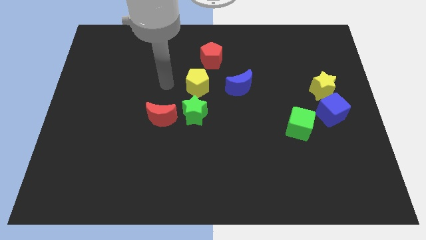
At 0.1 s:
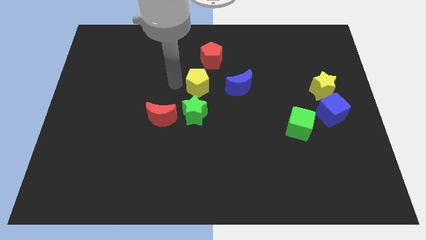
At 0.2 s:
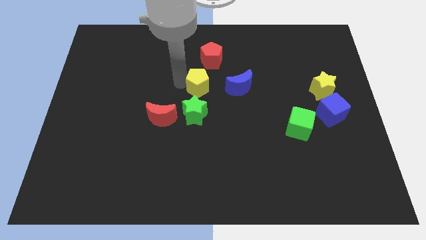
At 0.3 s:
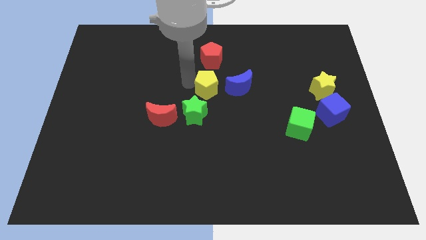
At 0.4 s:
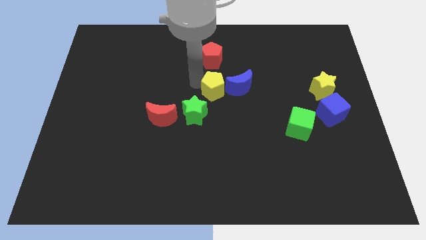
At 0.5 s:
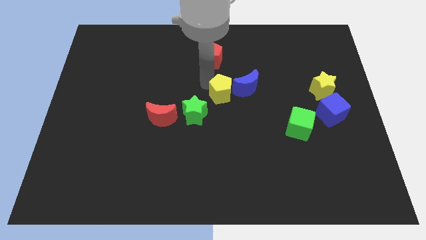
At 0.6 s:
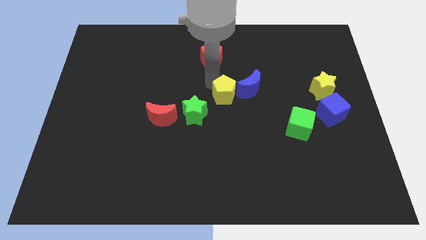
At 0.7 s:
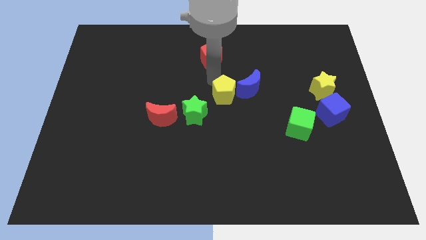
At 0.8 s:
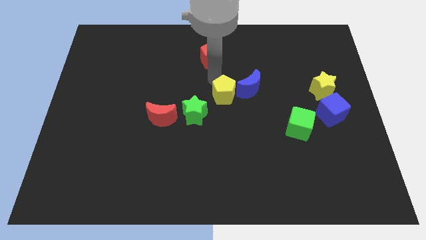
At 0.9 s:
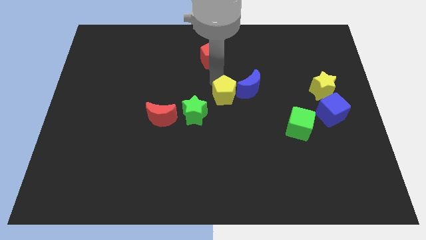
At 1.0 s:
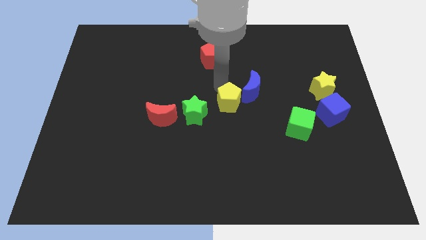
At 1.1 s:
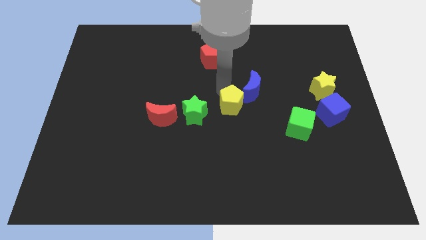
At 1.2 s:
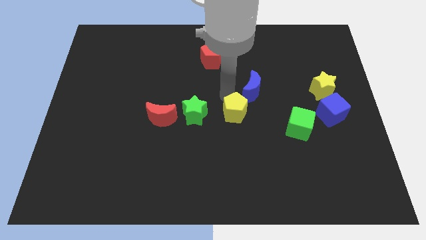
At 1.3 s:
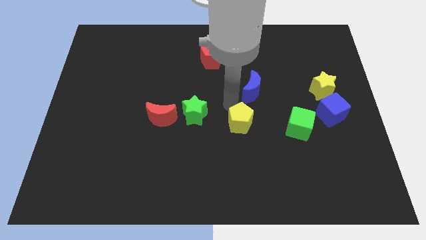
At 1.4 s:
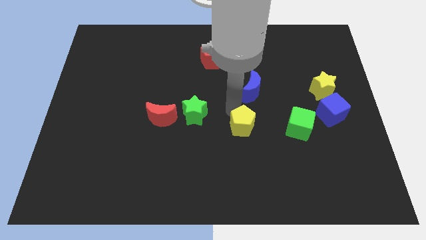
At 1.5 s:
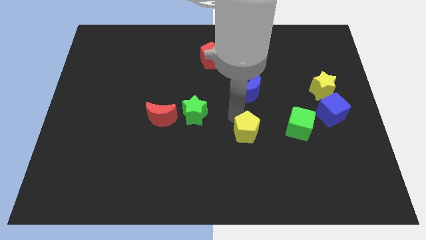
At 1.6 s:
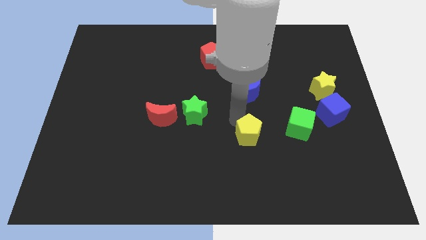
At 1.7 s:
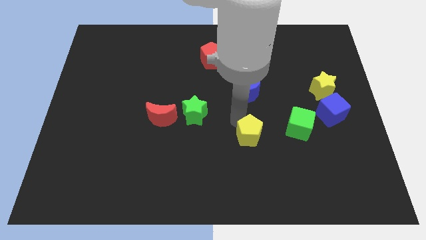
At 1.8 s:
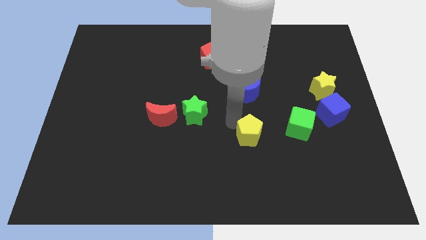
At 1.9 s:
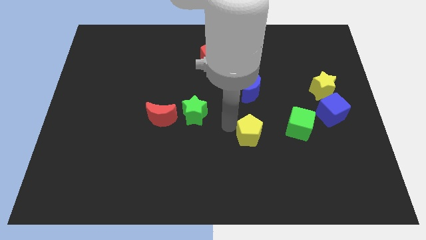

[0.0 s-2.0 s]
move the yellow pentagon away from the red pentagon

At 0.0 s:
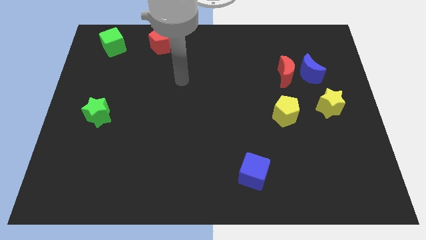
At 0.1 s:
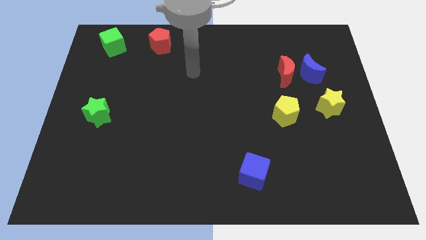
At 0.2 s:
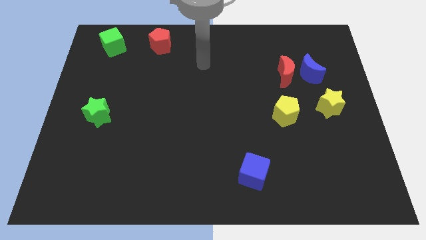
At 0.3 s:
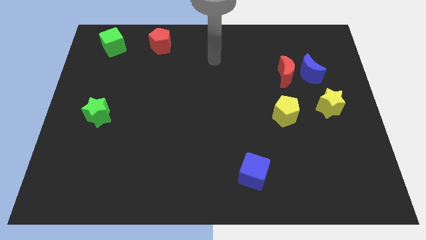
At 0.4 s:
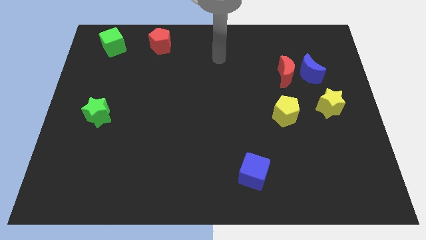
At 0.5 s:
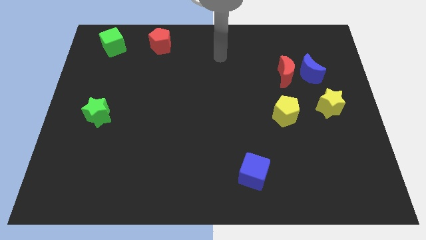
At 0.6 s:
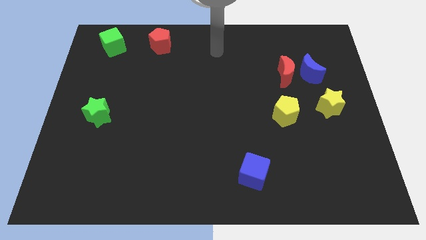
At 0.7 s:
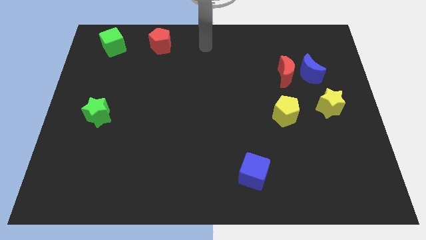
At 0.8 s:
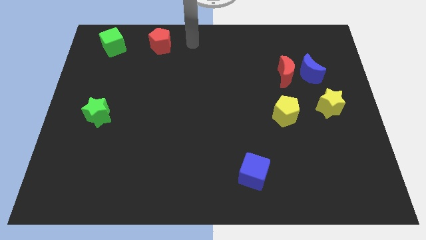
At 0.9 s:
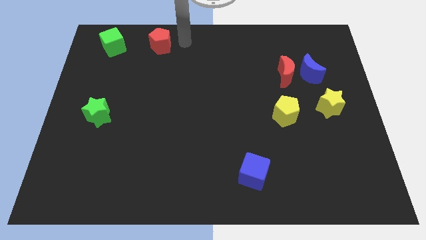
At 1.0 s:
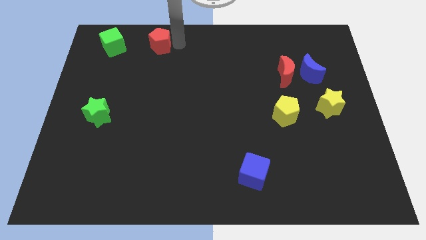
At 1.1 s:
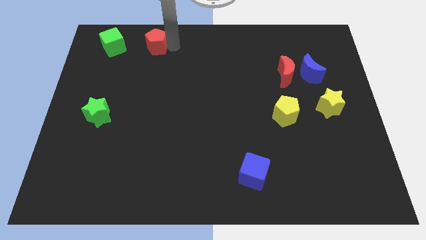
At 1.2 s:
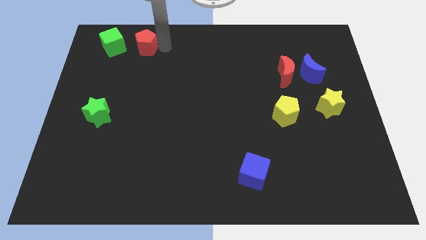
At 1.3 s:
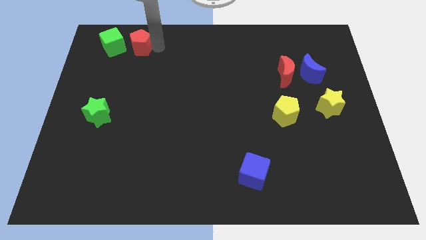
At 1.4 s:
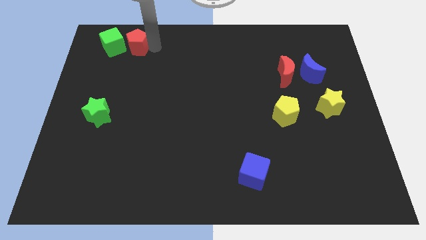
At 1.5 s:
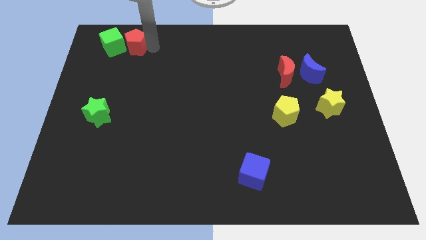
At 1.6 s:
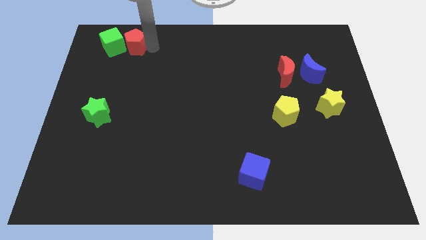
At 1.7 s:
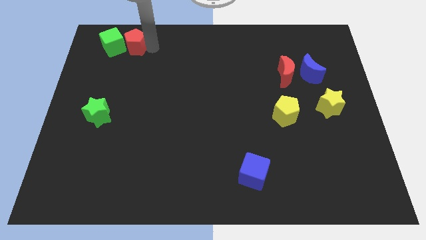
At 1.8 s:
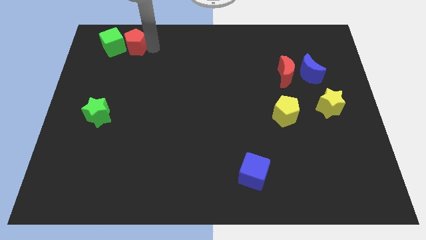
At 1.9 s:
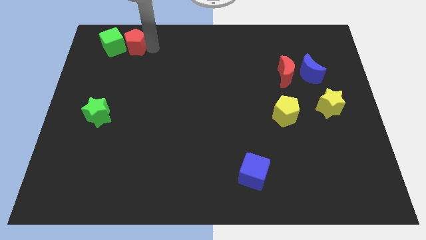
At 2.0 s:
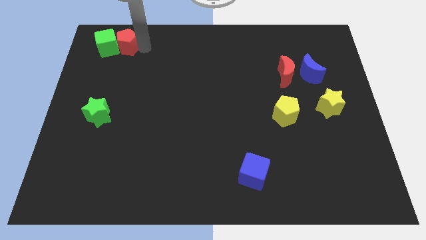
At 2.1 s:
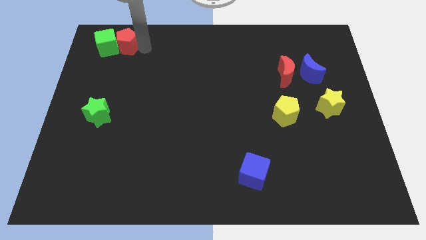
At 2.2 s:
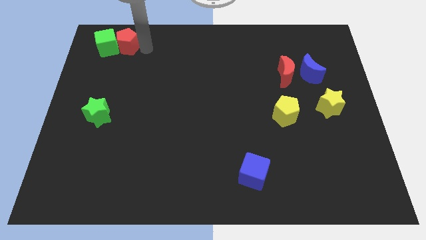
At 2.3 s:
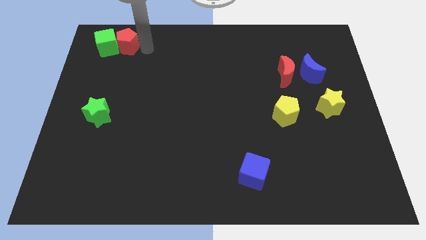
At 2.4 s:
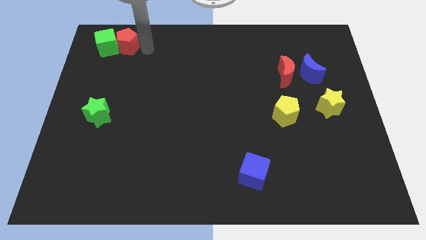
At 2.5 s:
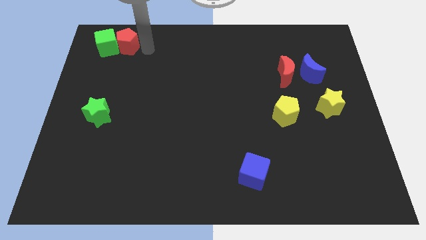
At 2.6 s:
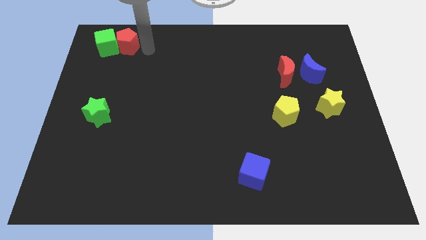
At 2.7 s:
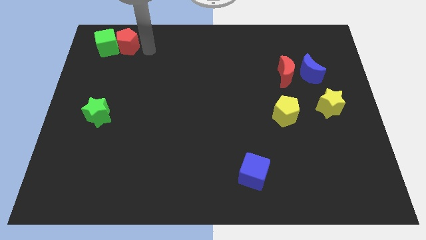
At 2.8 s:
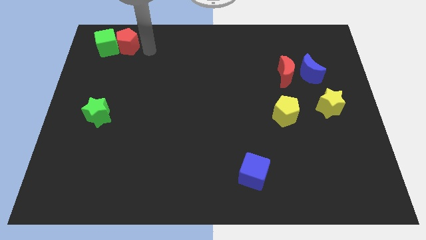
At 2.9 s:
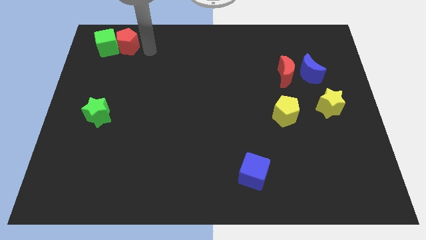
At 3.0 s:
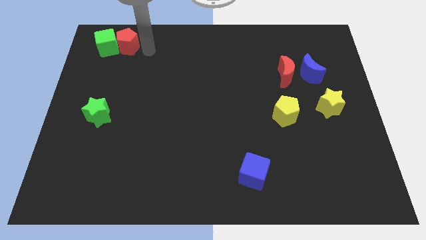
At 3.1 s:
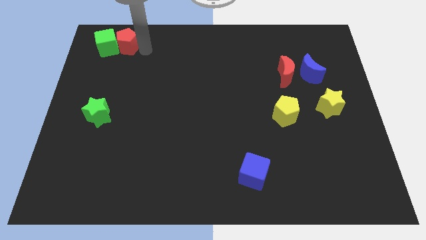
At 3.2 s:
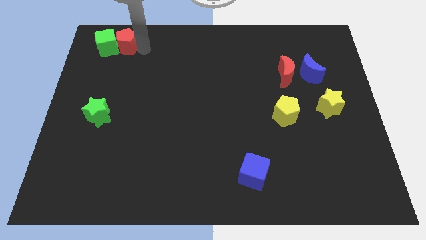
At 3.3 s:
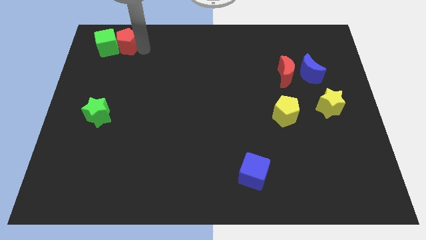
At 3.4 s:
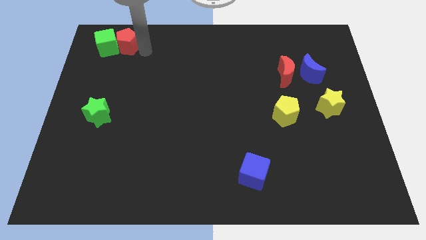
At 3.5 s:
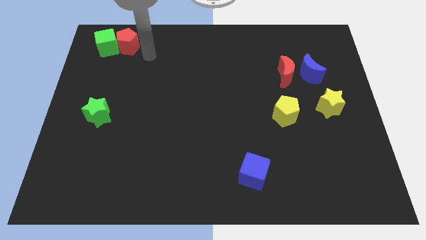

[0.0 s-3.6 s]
move the red pentagon into the green cube

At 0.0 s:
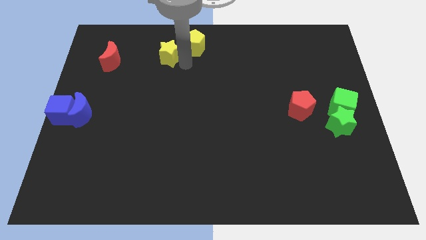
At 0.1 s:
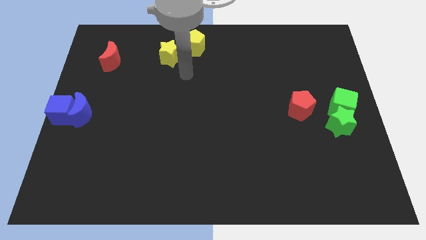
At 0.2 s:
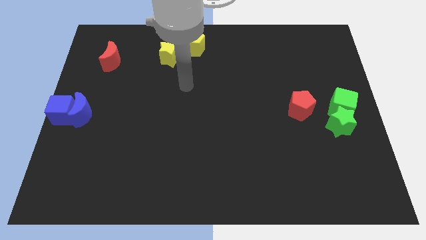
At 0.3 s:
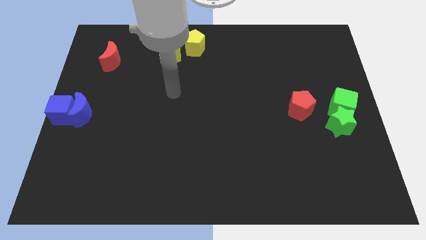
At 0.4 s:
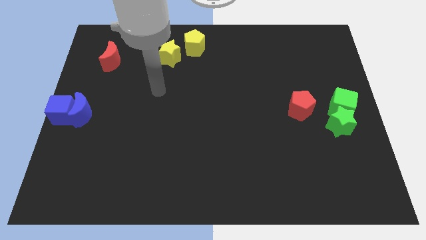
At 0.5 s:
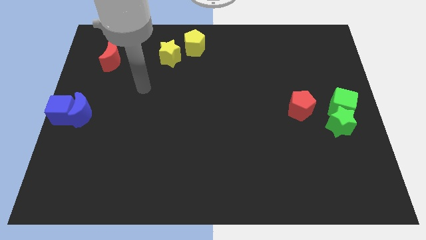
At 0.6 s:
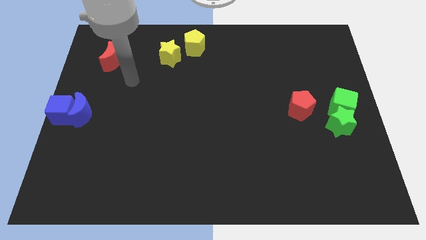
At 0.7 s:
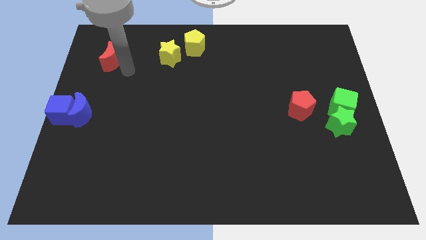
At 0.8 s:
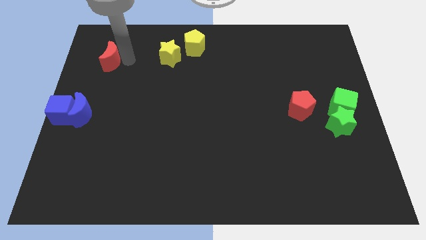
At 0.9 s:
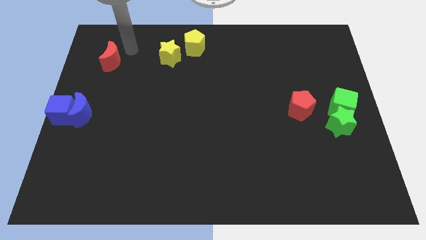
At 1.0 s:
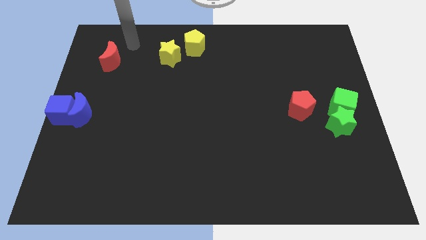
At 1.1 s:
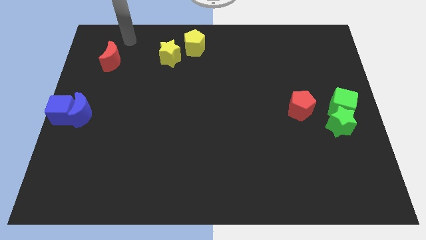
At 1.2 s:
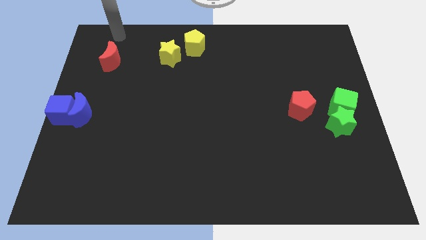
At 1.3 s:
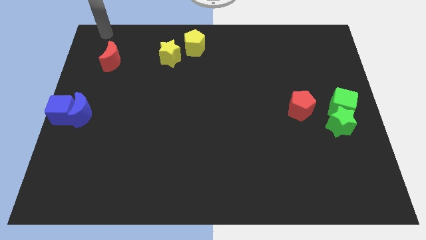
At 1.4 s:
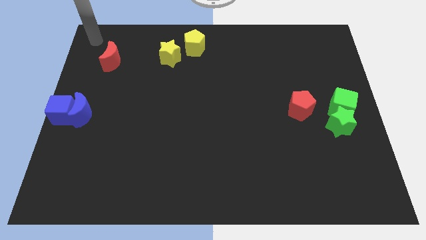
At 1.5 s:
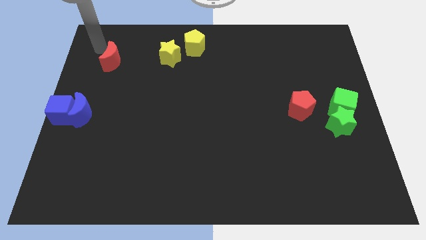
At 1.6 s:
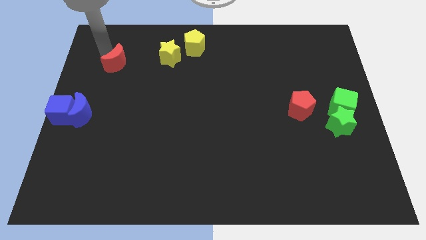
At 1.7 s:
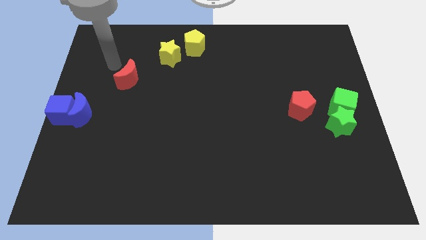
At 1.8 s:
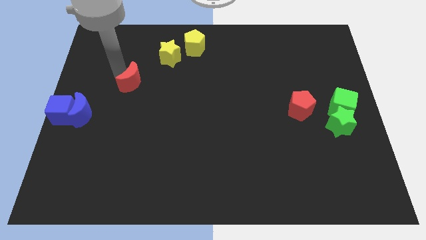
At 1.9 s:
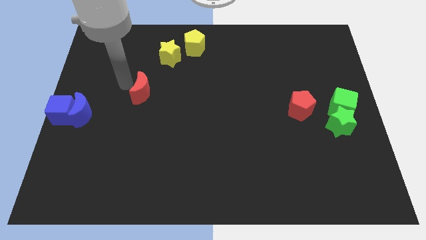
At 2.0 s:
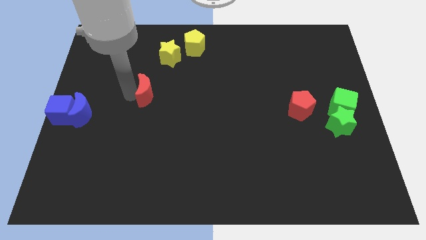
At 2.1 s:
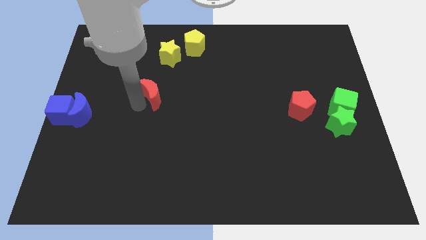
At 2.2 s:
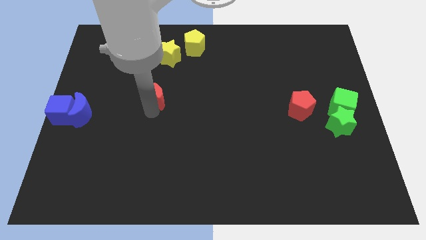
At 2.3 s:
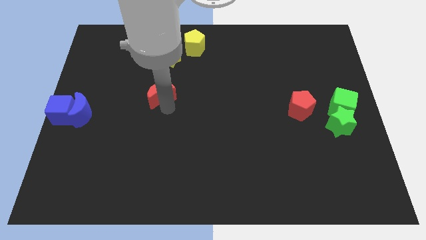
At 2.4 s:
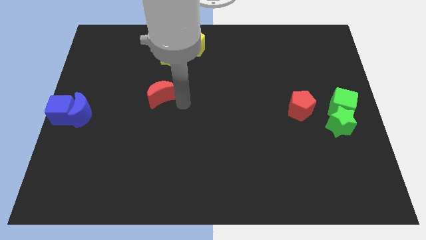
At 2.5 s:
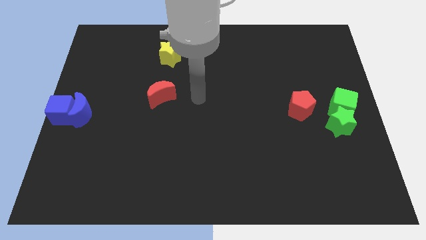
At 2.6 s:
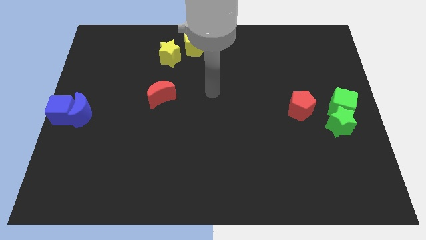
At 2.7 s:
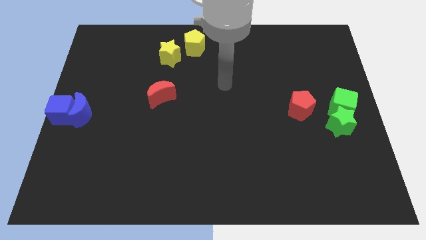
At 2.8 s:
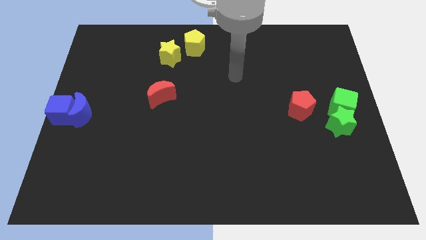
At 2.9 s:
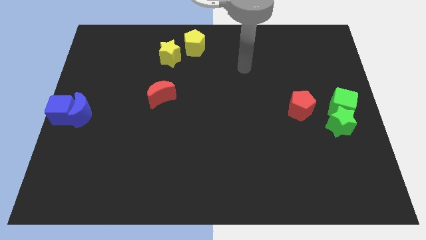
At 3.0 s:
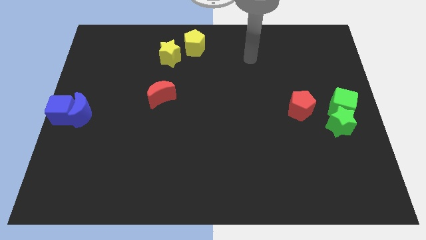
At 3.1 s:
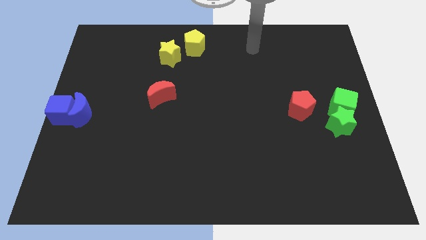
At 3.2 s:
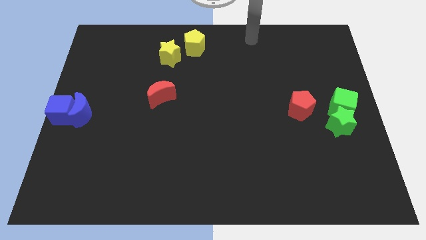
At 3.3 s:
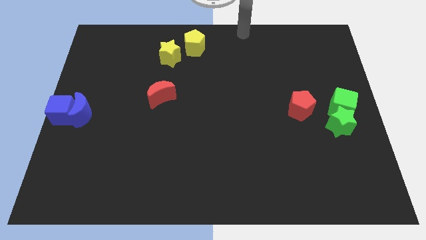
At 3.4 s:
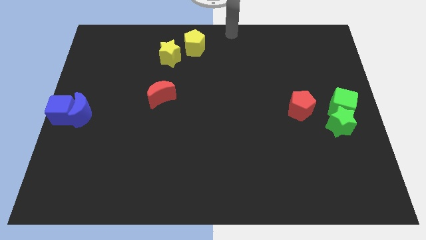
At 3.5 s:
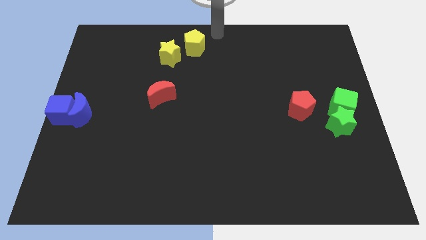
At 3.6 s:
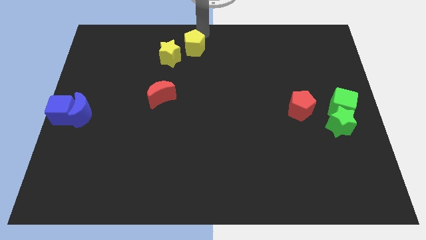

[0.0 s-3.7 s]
move the red crescent to the bottom right
